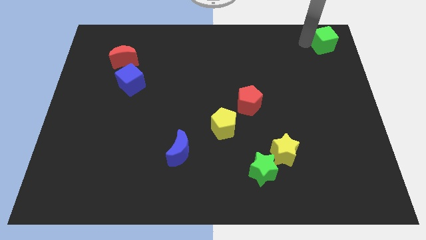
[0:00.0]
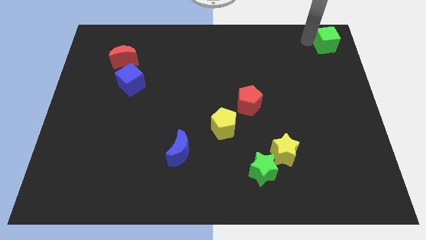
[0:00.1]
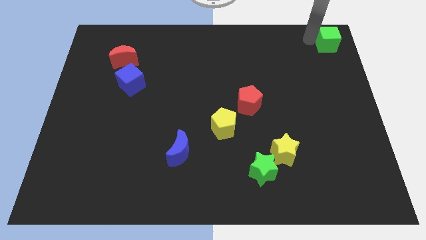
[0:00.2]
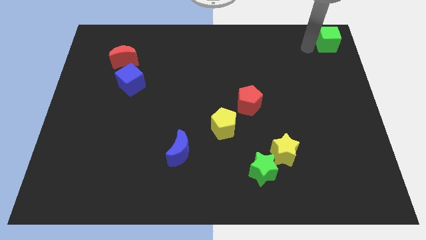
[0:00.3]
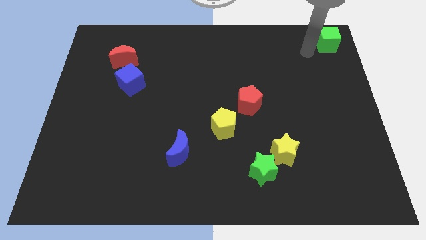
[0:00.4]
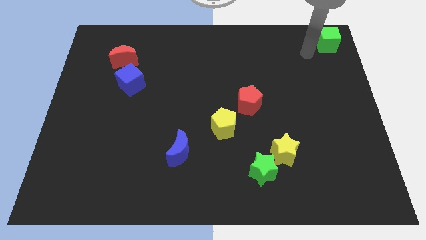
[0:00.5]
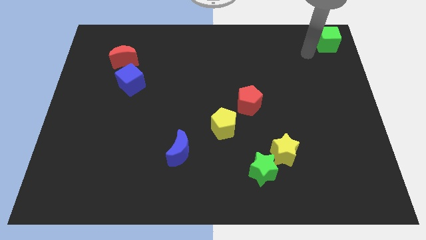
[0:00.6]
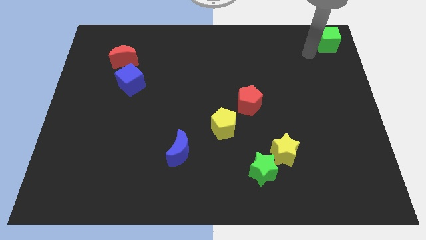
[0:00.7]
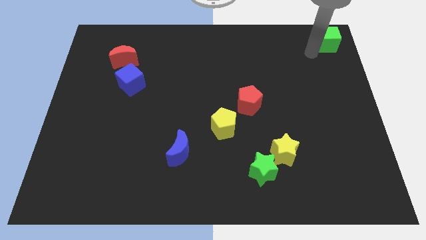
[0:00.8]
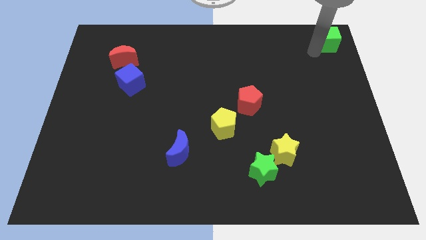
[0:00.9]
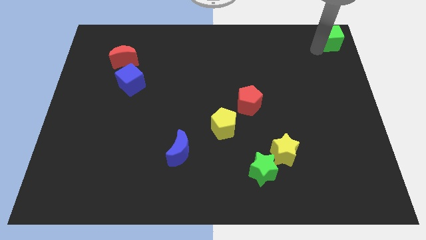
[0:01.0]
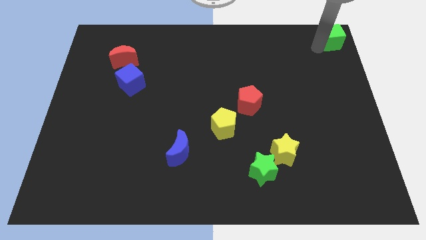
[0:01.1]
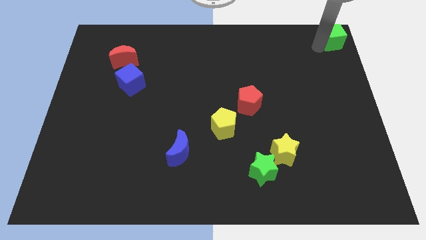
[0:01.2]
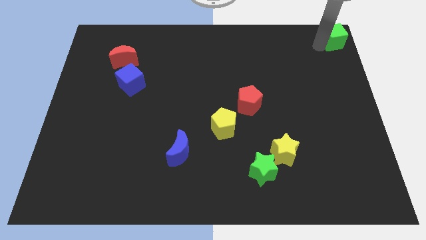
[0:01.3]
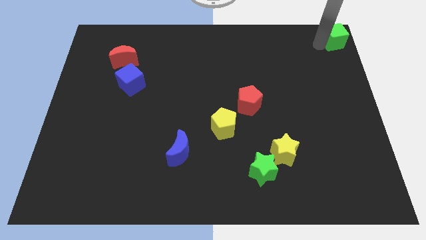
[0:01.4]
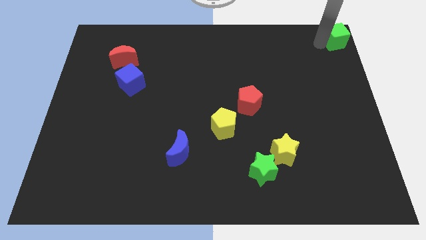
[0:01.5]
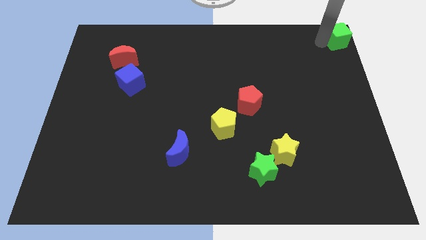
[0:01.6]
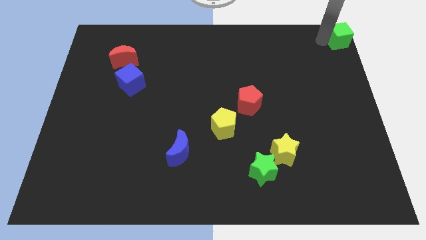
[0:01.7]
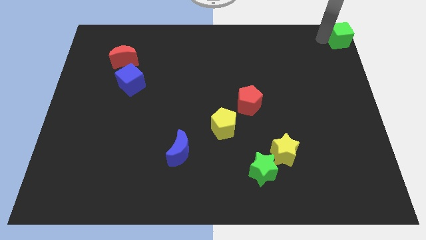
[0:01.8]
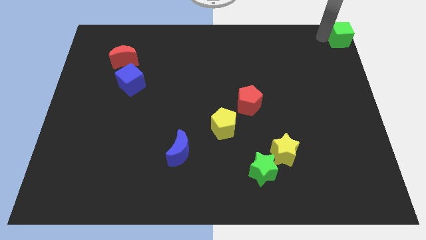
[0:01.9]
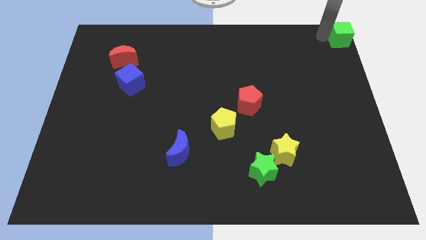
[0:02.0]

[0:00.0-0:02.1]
place the green block to the top right corner

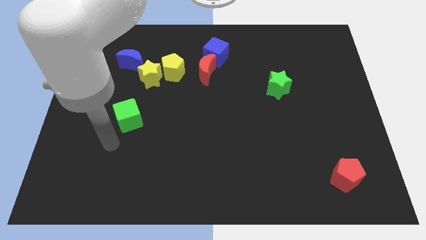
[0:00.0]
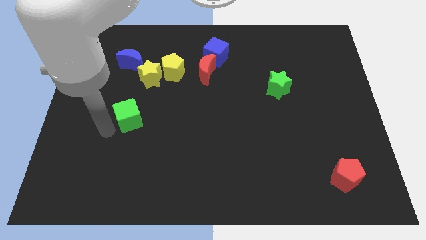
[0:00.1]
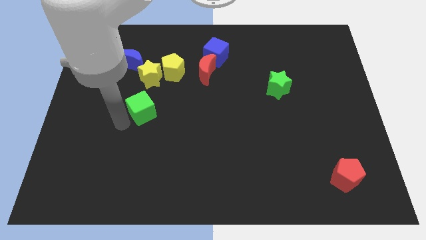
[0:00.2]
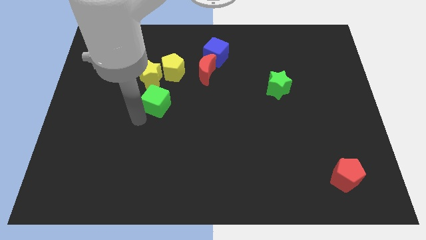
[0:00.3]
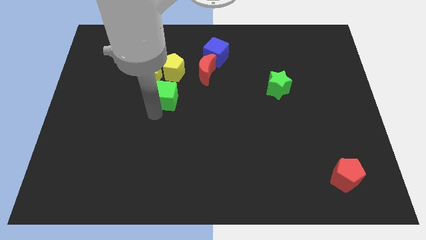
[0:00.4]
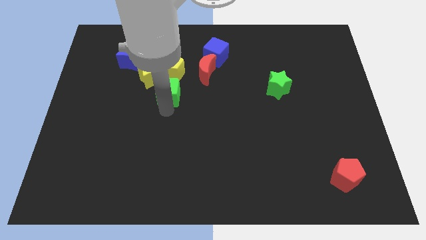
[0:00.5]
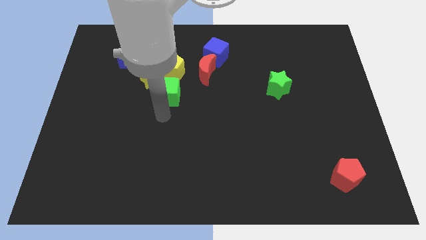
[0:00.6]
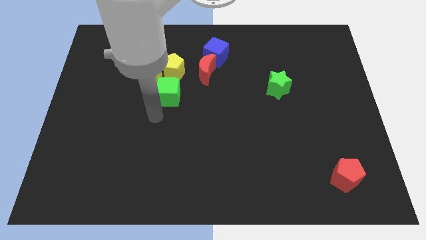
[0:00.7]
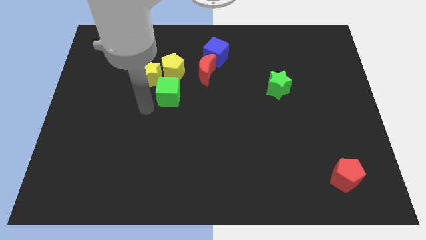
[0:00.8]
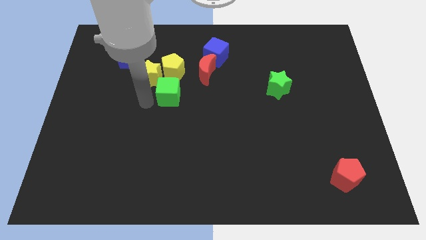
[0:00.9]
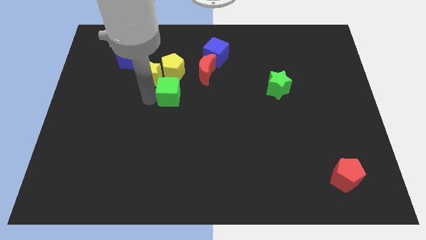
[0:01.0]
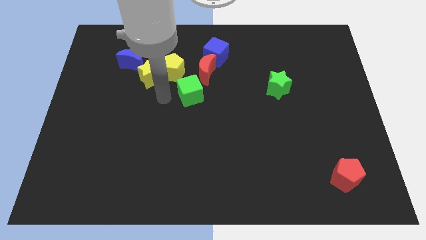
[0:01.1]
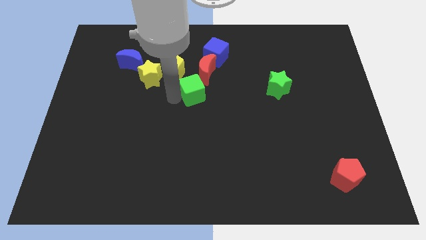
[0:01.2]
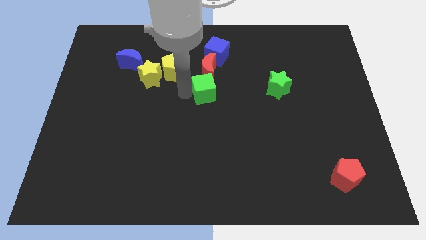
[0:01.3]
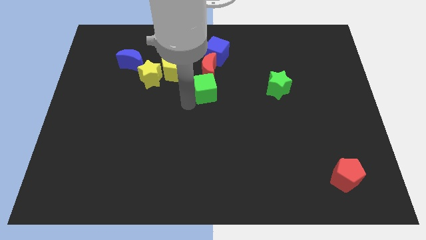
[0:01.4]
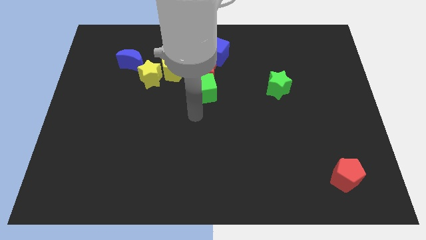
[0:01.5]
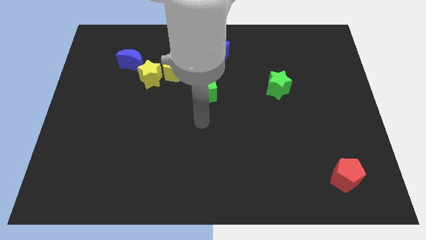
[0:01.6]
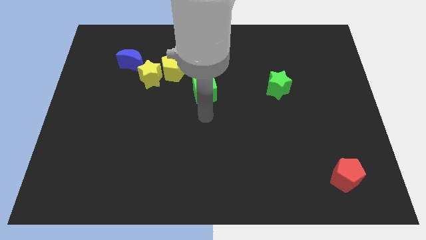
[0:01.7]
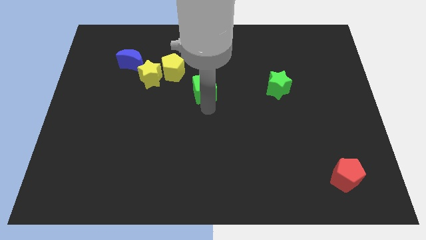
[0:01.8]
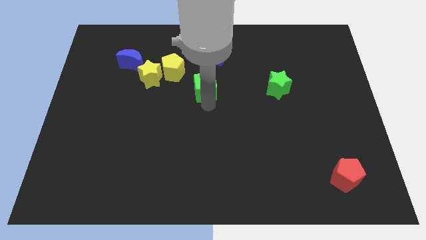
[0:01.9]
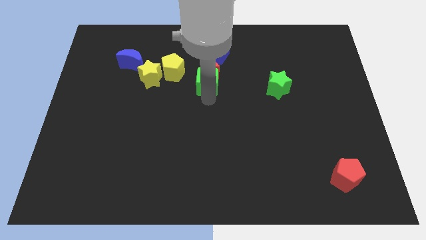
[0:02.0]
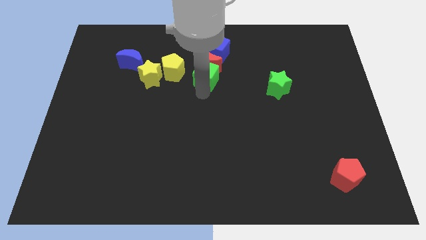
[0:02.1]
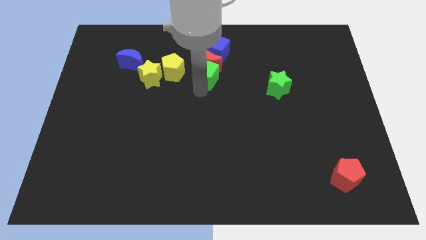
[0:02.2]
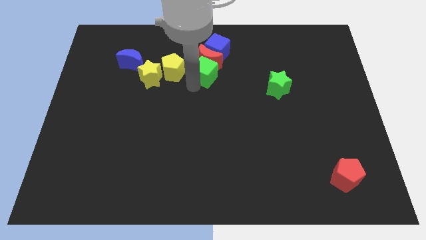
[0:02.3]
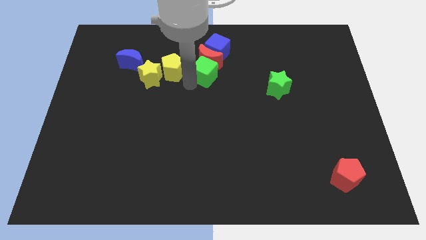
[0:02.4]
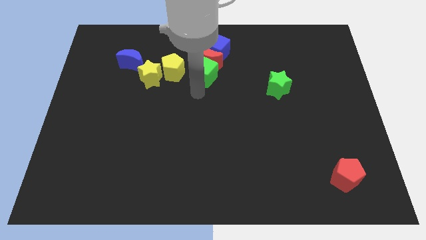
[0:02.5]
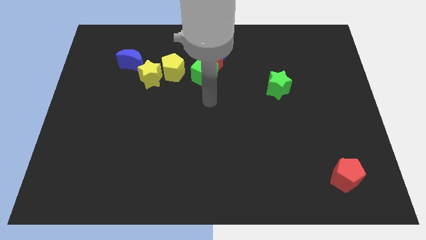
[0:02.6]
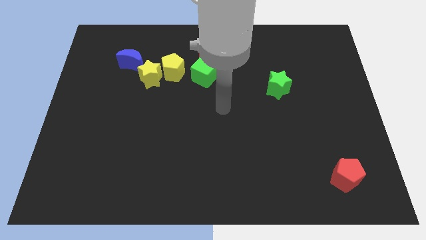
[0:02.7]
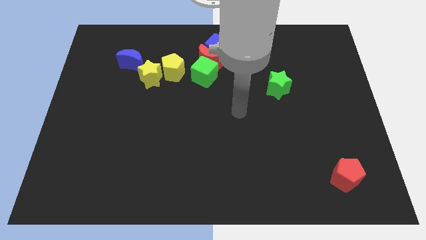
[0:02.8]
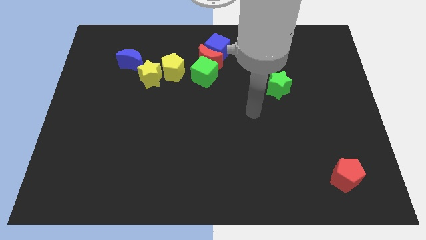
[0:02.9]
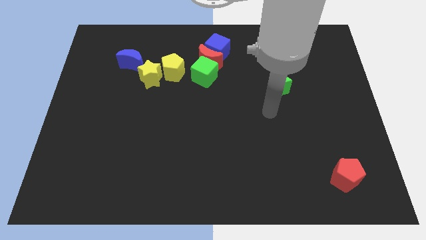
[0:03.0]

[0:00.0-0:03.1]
push the blue cube and red crescent with the green cube

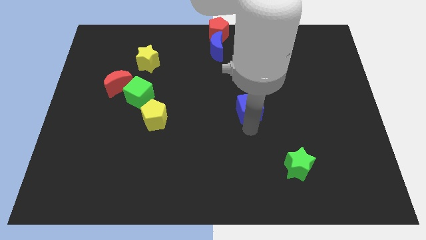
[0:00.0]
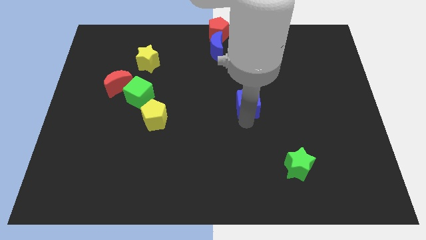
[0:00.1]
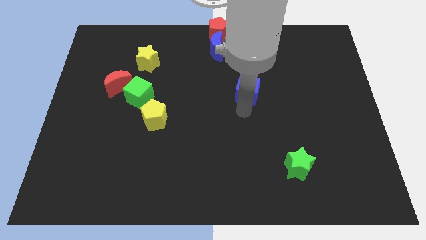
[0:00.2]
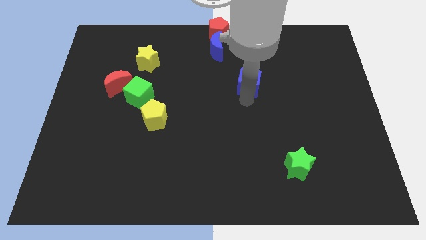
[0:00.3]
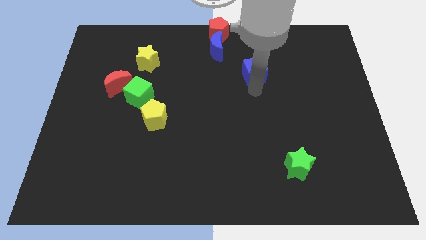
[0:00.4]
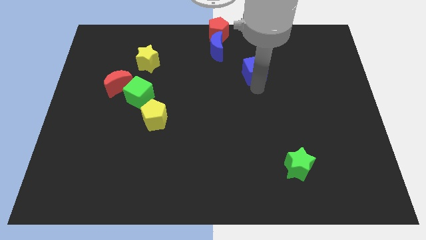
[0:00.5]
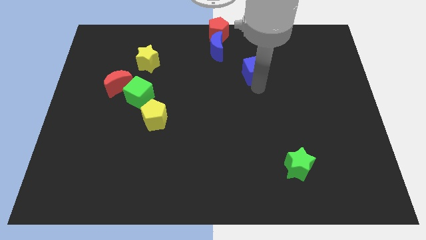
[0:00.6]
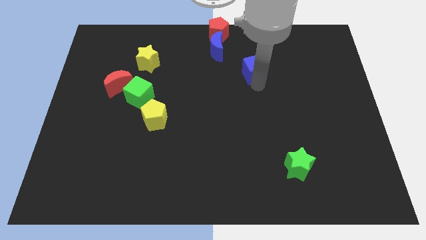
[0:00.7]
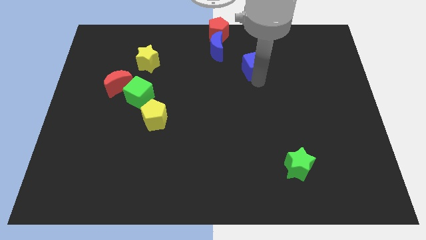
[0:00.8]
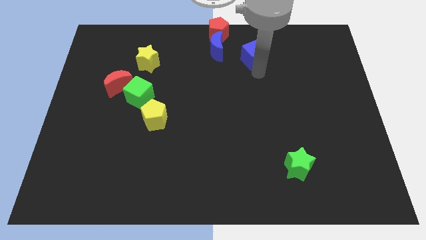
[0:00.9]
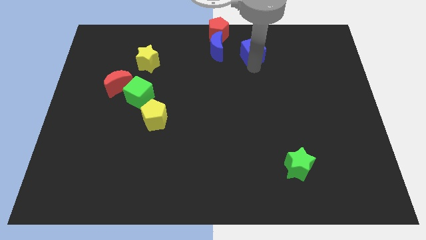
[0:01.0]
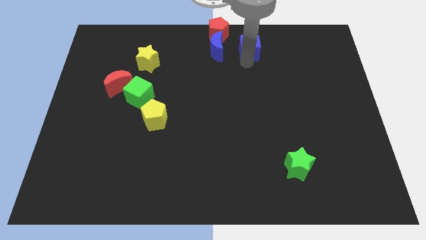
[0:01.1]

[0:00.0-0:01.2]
place the blue cube right to the blue moon

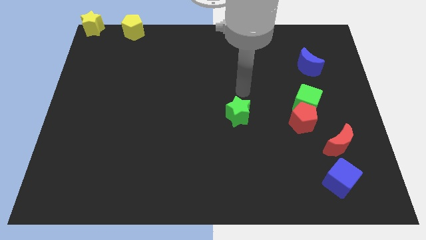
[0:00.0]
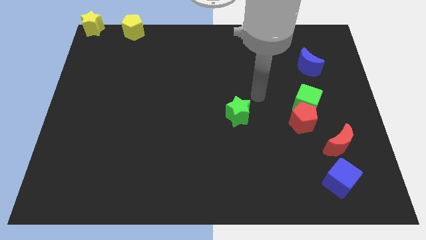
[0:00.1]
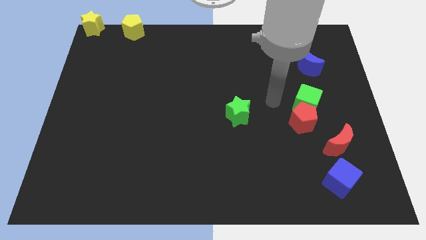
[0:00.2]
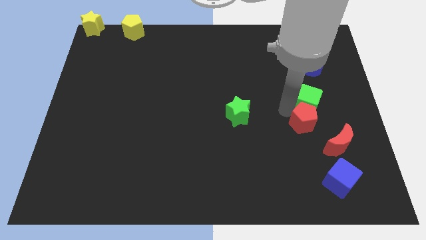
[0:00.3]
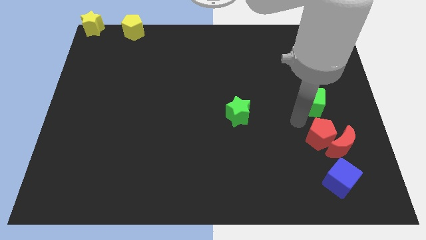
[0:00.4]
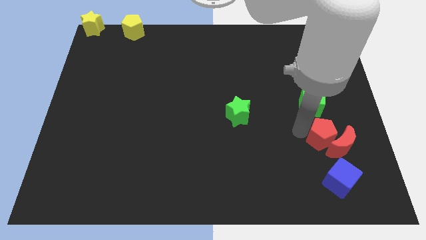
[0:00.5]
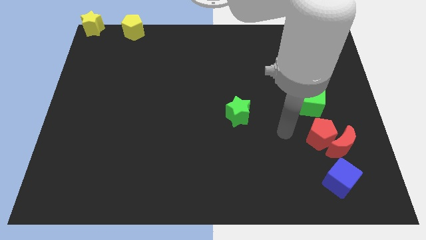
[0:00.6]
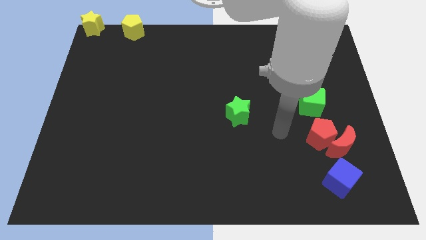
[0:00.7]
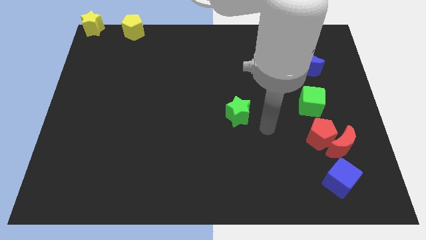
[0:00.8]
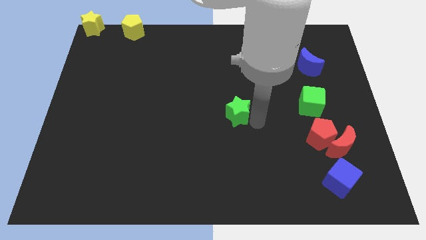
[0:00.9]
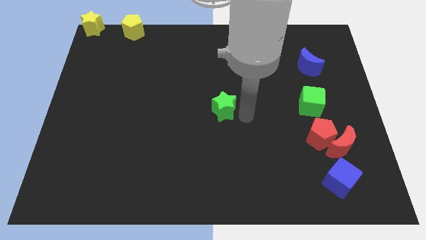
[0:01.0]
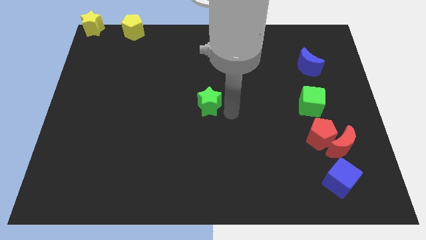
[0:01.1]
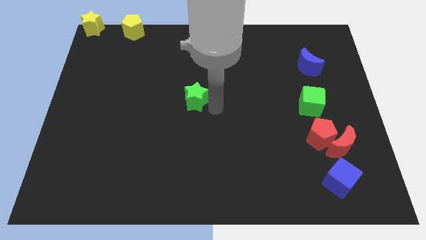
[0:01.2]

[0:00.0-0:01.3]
separate the green cube and the red pentagon

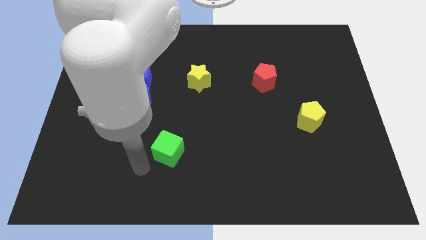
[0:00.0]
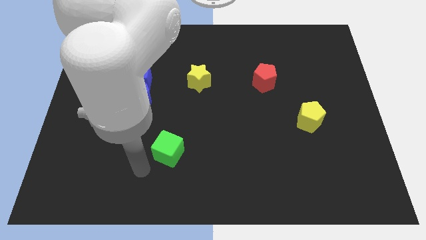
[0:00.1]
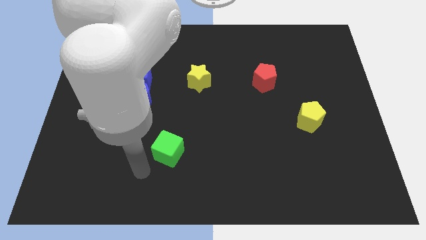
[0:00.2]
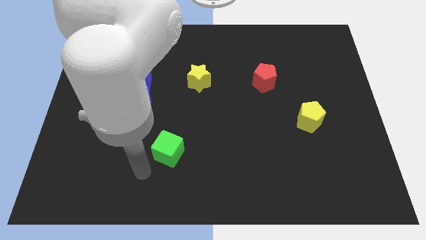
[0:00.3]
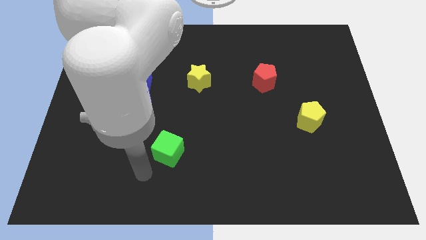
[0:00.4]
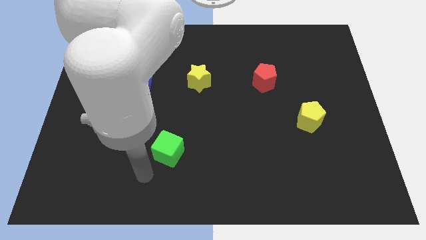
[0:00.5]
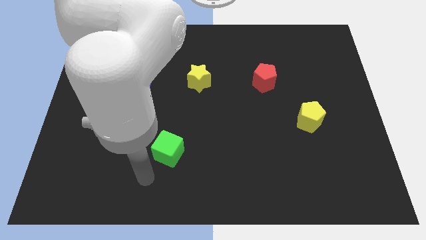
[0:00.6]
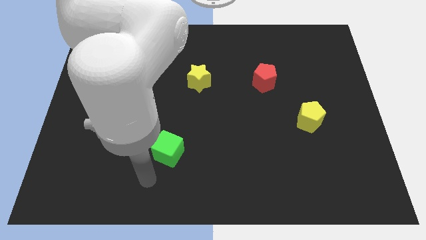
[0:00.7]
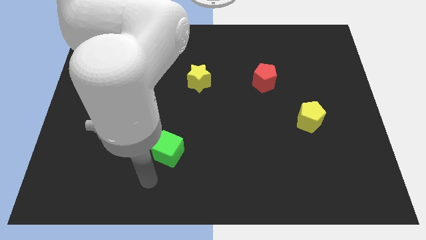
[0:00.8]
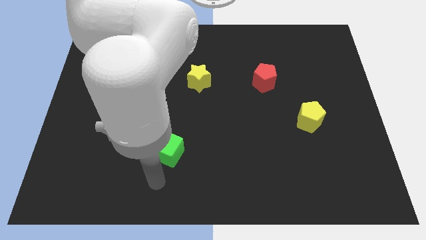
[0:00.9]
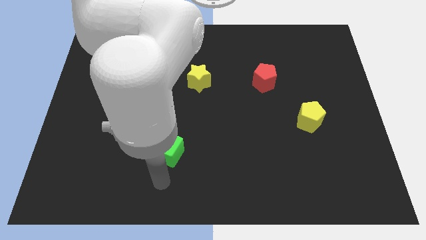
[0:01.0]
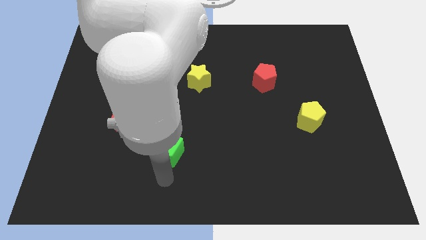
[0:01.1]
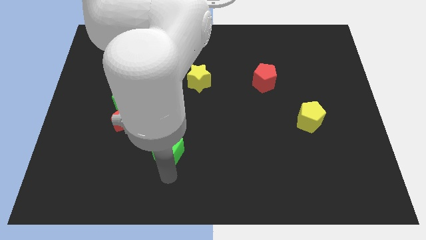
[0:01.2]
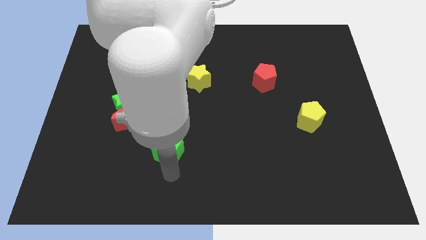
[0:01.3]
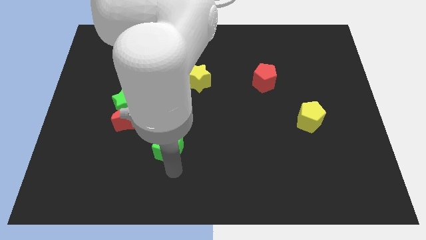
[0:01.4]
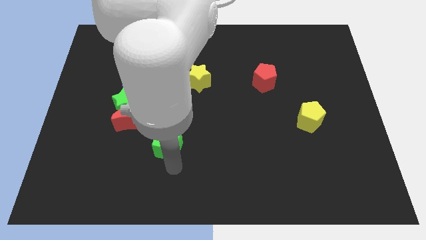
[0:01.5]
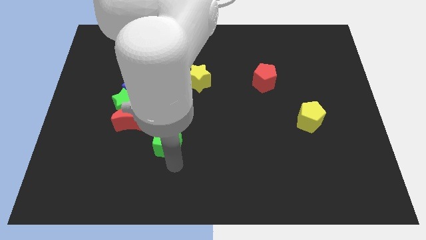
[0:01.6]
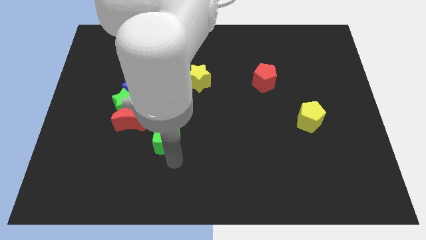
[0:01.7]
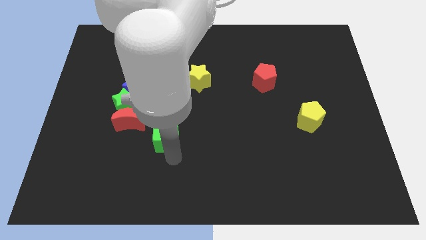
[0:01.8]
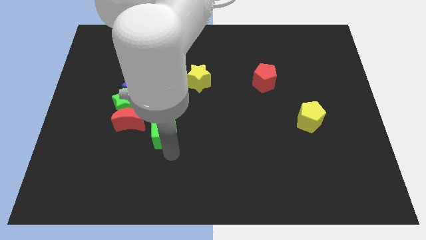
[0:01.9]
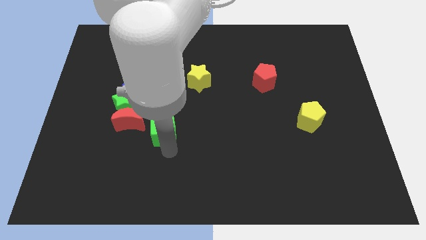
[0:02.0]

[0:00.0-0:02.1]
move the green cube up slightly
